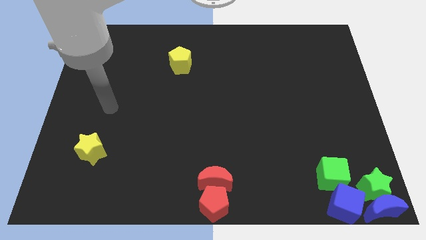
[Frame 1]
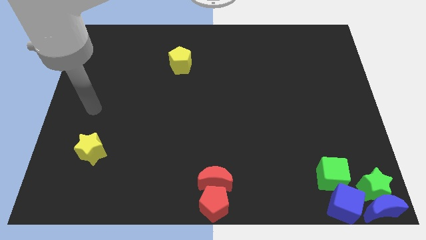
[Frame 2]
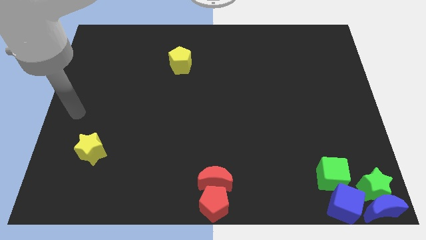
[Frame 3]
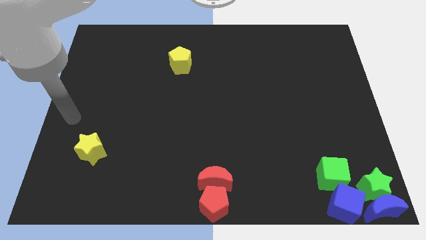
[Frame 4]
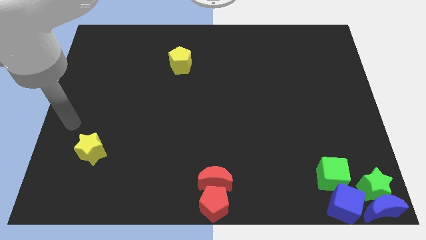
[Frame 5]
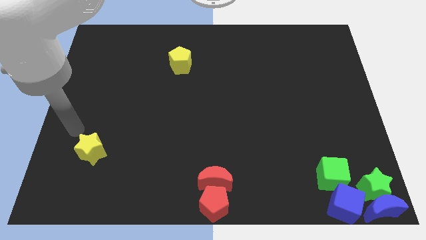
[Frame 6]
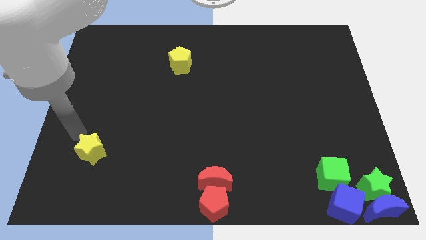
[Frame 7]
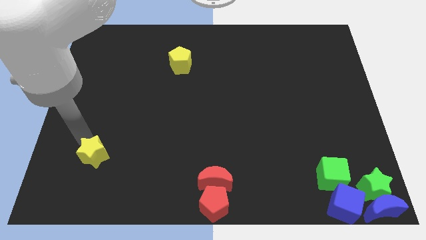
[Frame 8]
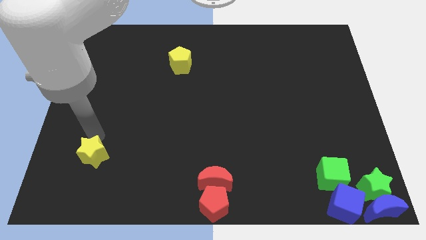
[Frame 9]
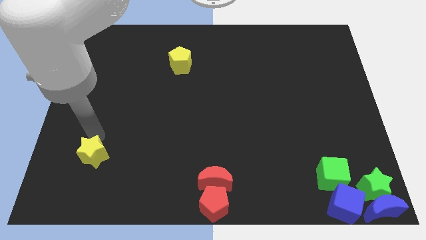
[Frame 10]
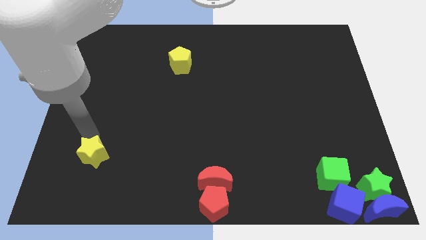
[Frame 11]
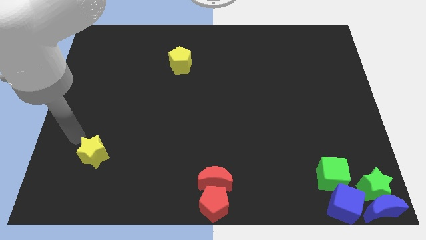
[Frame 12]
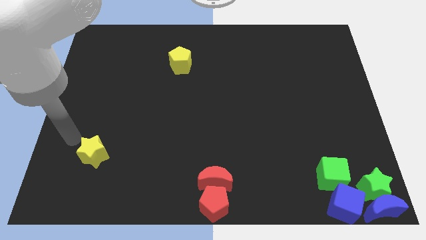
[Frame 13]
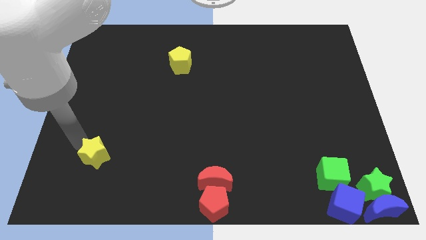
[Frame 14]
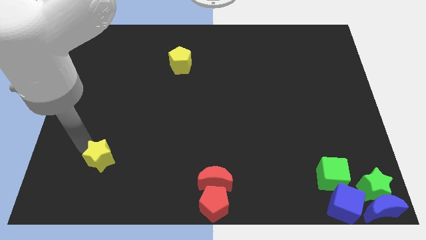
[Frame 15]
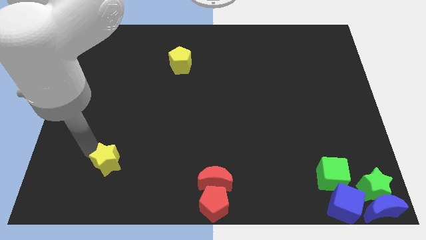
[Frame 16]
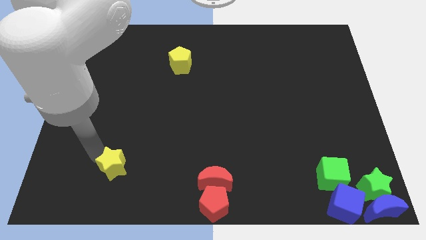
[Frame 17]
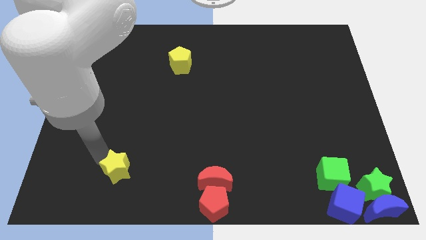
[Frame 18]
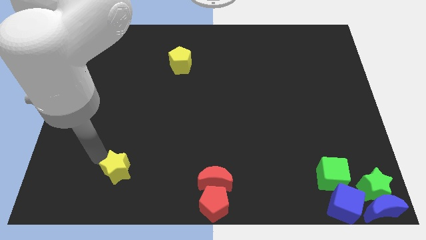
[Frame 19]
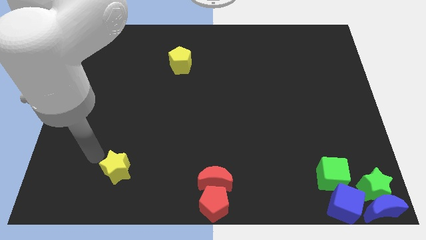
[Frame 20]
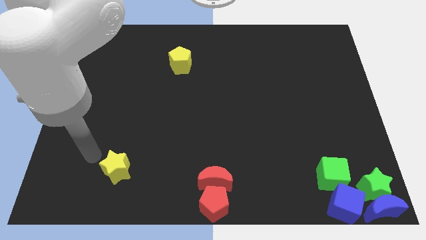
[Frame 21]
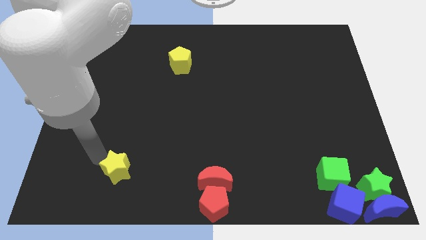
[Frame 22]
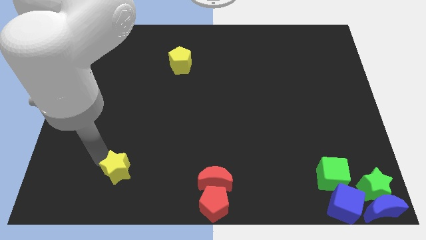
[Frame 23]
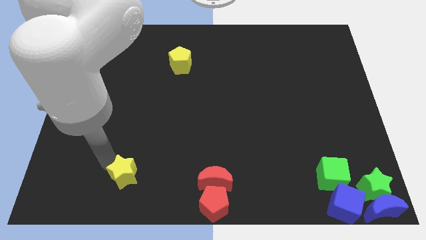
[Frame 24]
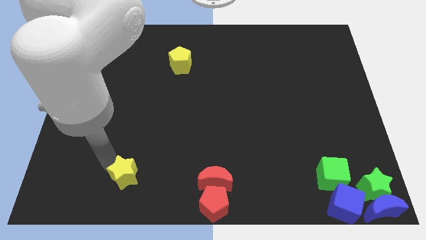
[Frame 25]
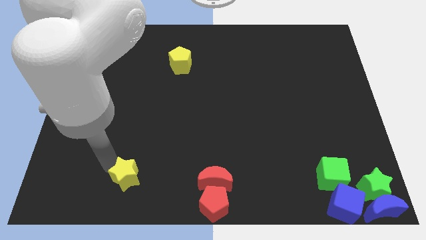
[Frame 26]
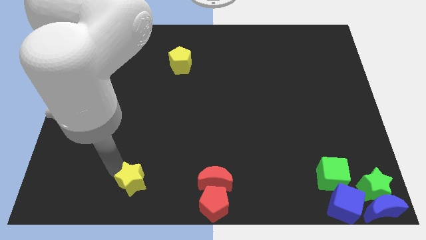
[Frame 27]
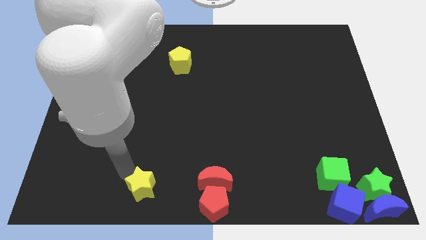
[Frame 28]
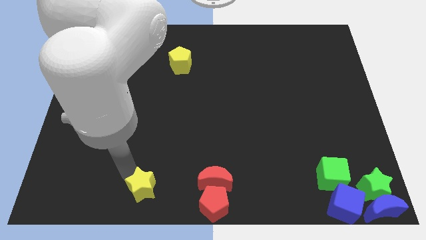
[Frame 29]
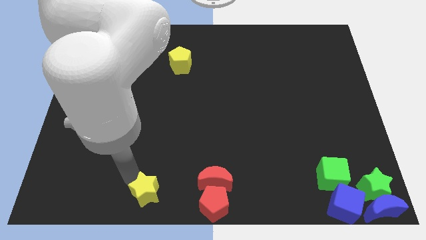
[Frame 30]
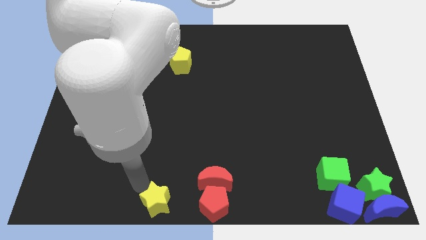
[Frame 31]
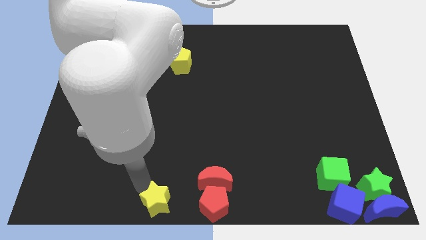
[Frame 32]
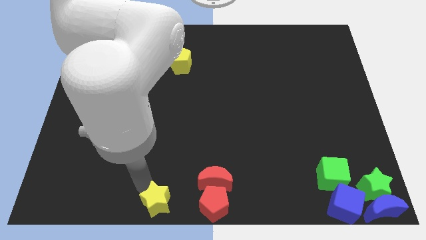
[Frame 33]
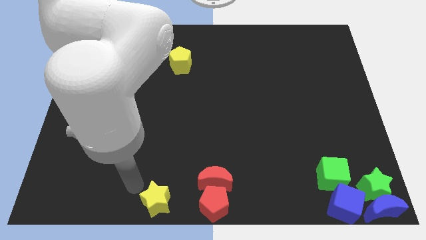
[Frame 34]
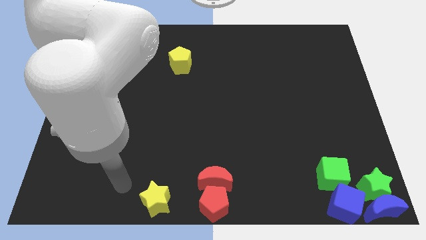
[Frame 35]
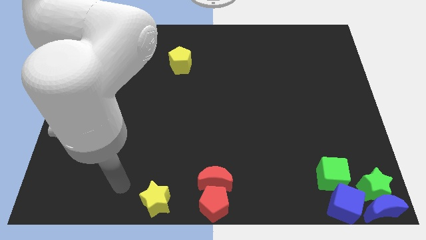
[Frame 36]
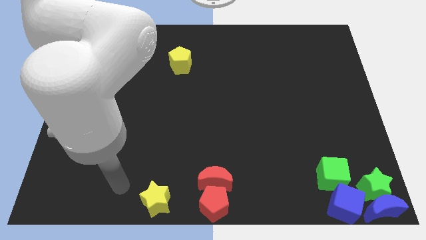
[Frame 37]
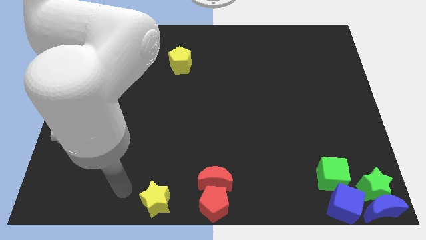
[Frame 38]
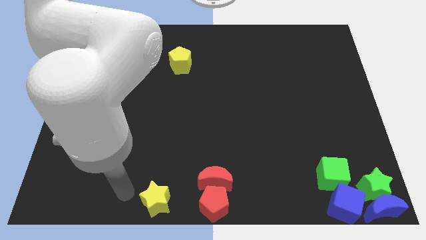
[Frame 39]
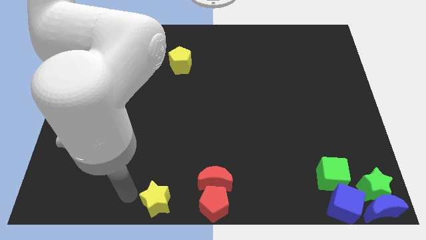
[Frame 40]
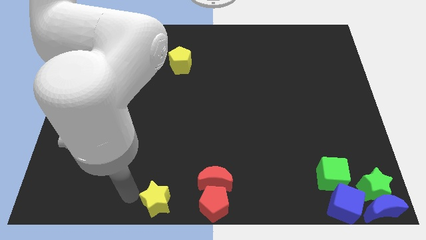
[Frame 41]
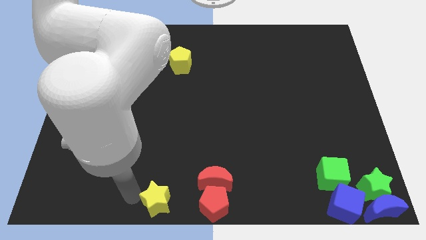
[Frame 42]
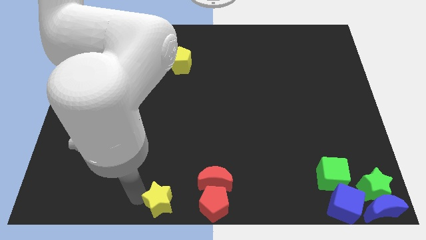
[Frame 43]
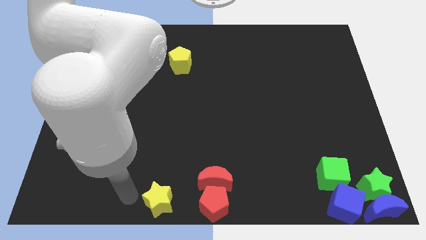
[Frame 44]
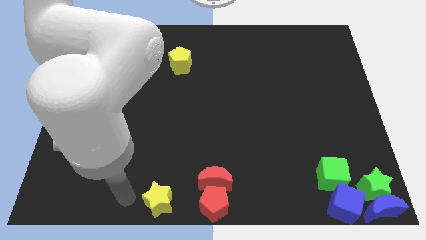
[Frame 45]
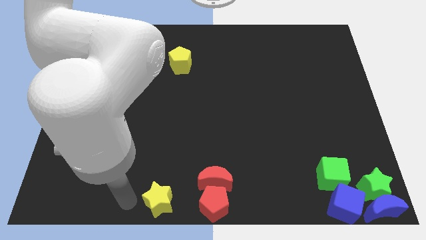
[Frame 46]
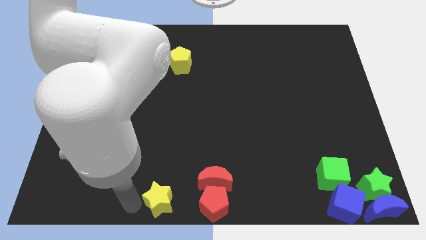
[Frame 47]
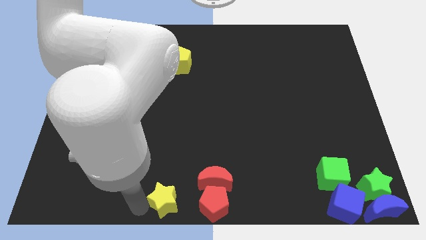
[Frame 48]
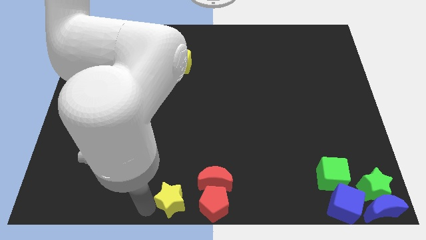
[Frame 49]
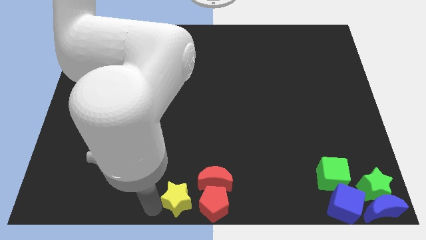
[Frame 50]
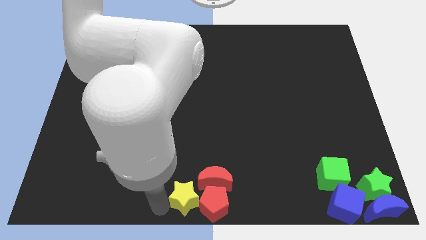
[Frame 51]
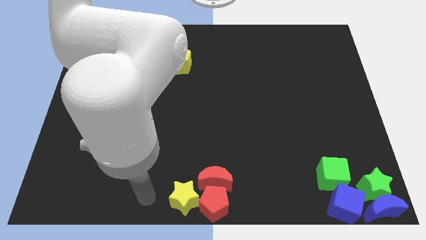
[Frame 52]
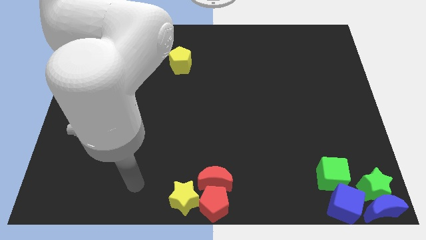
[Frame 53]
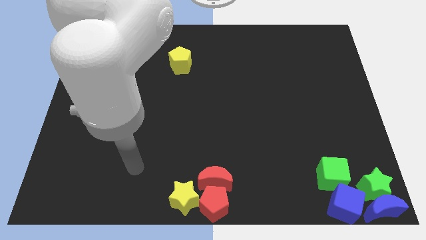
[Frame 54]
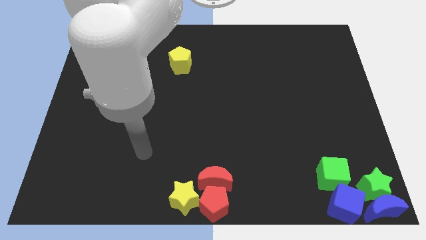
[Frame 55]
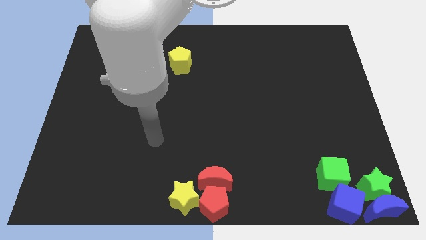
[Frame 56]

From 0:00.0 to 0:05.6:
push the yellow star towards the red pentagon

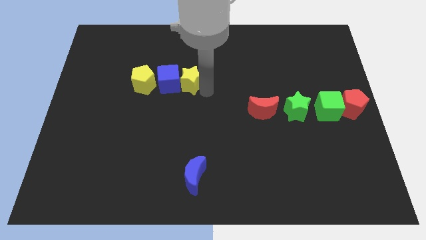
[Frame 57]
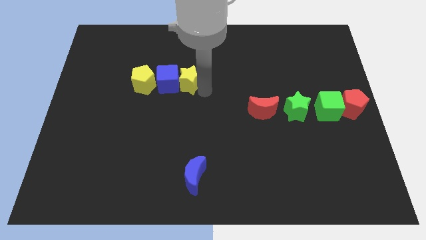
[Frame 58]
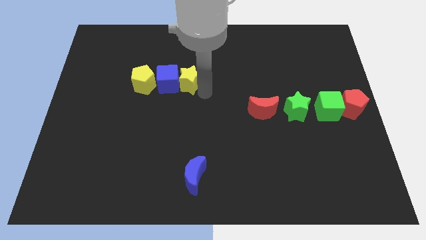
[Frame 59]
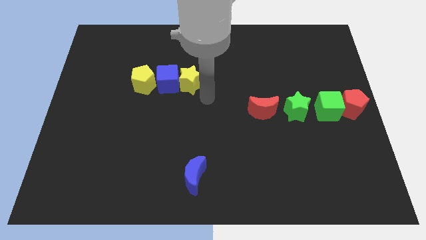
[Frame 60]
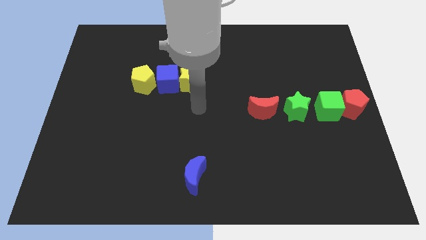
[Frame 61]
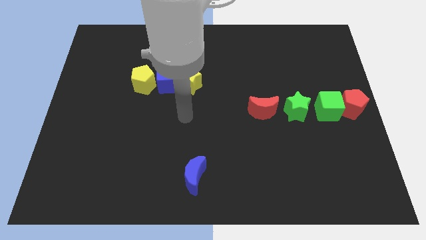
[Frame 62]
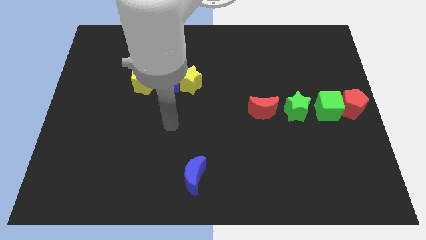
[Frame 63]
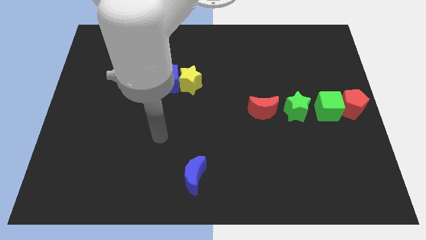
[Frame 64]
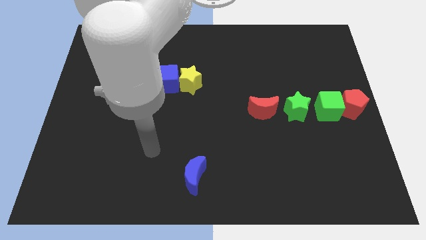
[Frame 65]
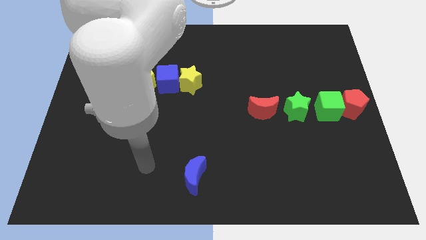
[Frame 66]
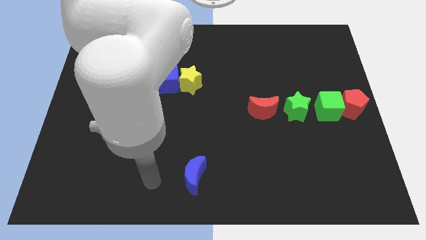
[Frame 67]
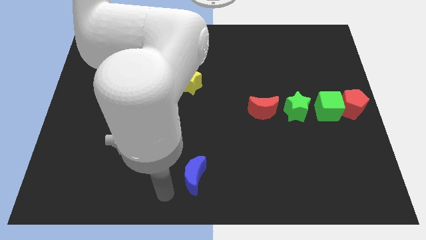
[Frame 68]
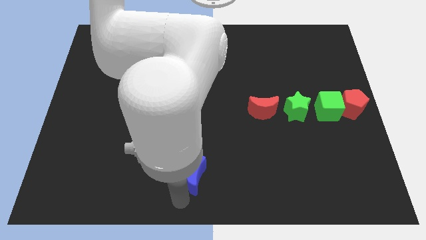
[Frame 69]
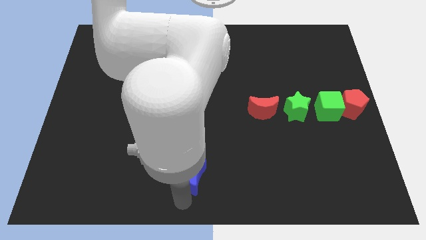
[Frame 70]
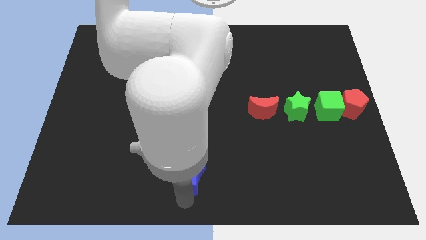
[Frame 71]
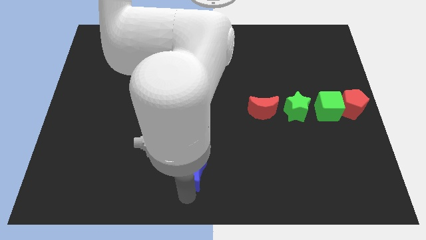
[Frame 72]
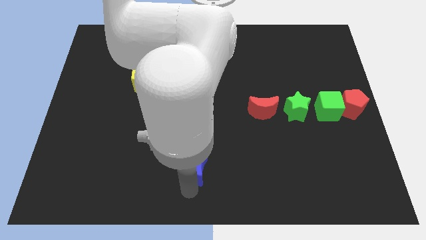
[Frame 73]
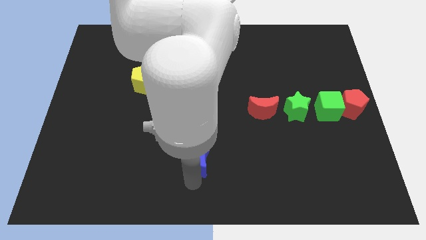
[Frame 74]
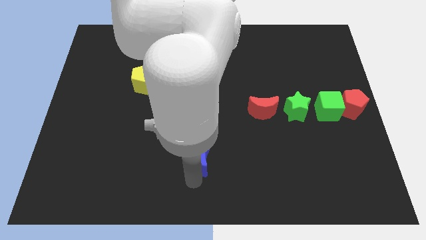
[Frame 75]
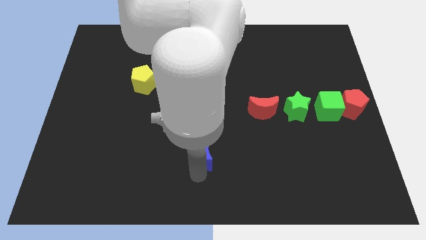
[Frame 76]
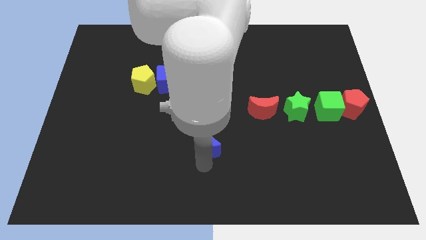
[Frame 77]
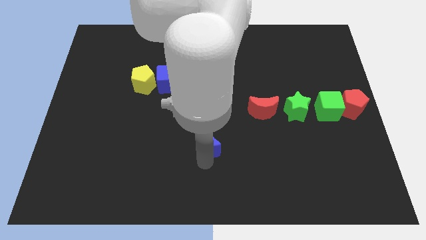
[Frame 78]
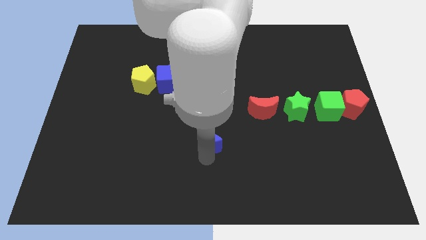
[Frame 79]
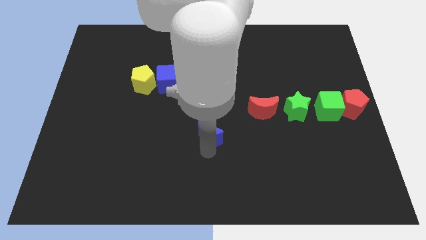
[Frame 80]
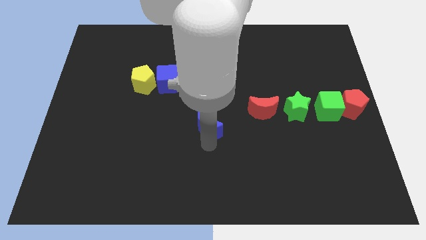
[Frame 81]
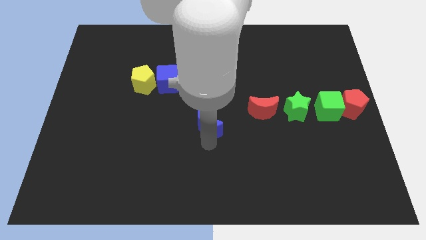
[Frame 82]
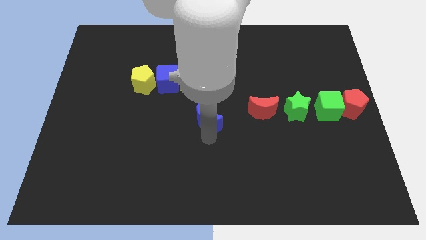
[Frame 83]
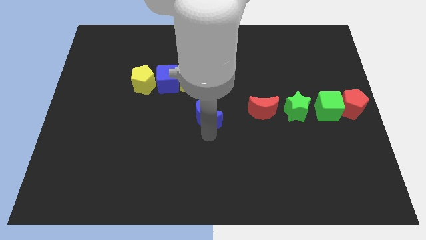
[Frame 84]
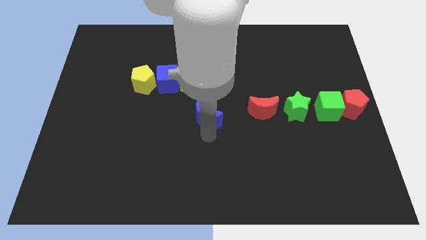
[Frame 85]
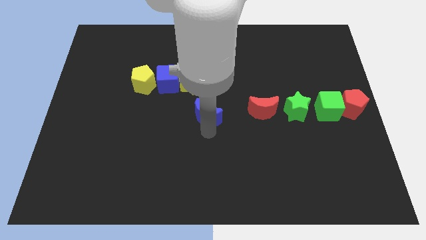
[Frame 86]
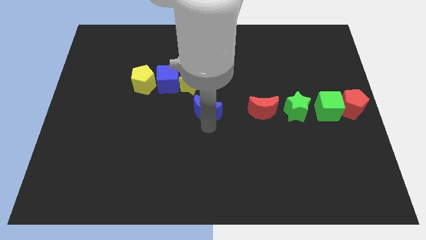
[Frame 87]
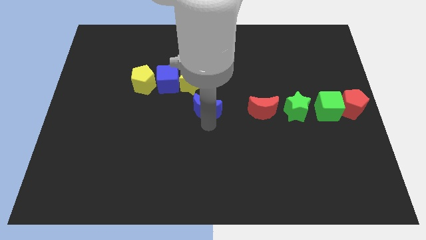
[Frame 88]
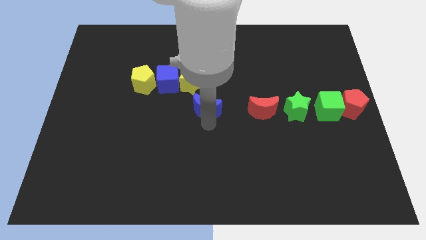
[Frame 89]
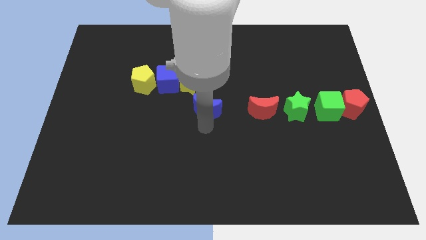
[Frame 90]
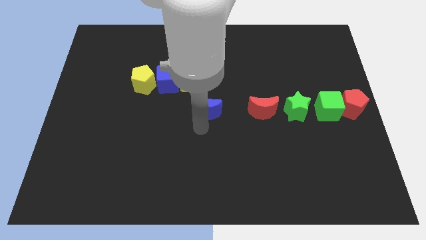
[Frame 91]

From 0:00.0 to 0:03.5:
move the blue crescent horizontally to the left side of the red moon
